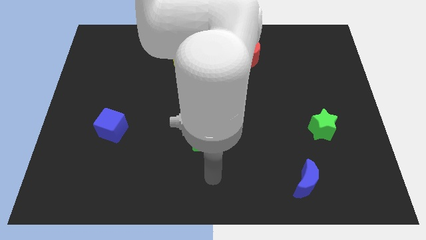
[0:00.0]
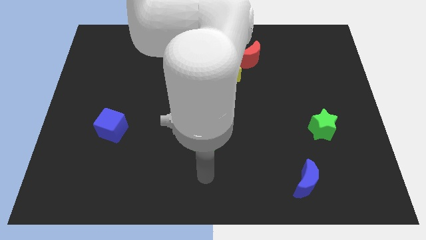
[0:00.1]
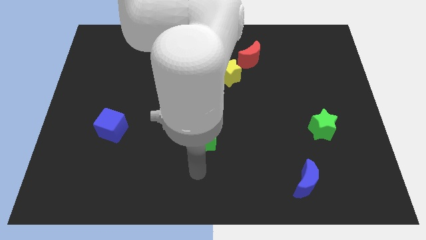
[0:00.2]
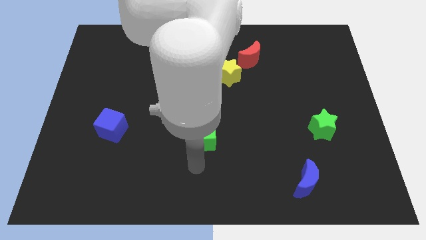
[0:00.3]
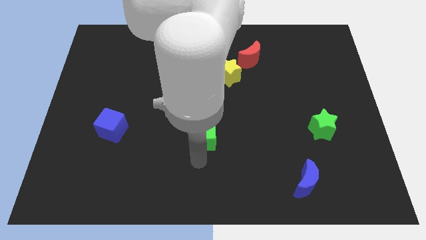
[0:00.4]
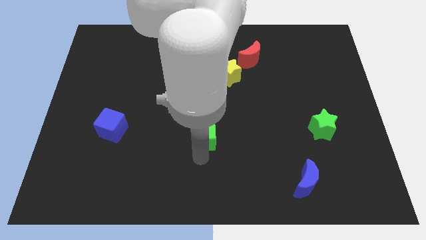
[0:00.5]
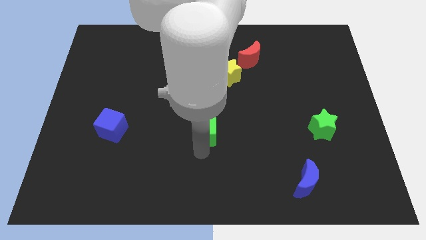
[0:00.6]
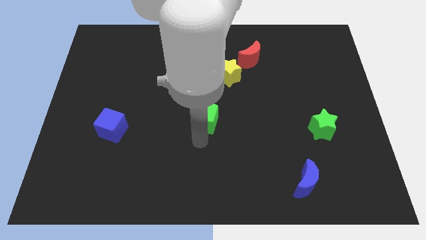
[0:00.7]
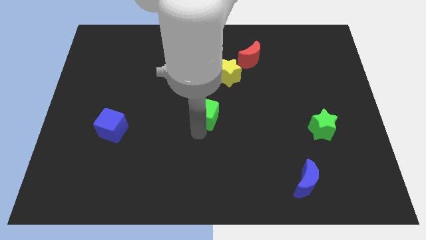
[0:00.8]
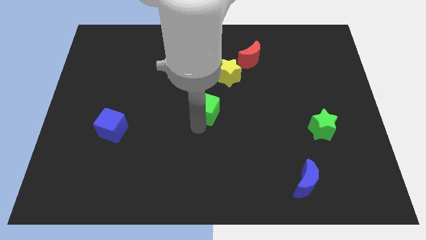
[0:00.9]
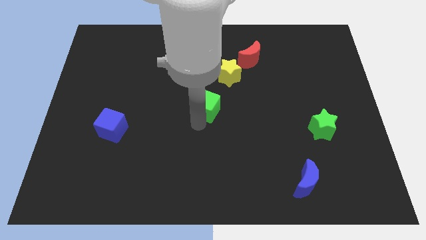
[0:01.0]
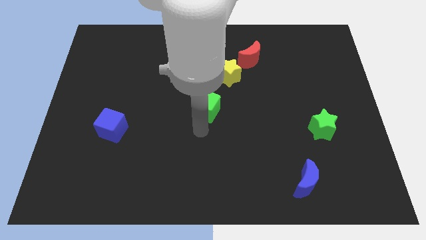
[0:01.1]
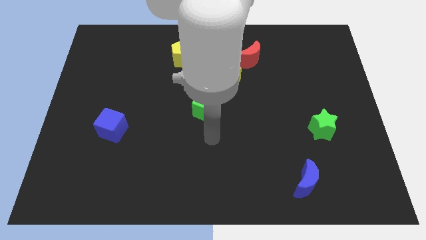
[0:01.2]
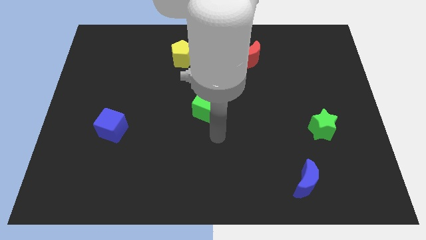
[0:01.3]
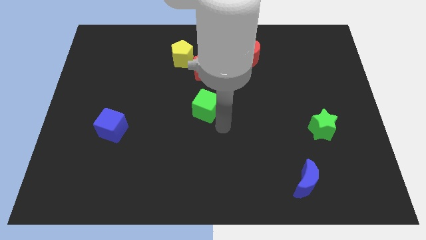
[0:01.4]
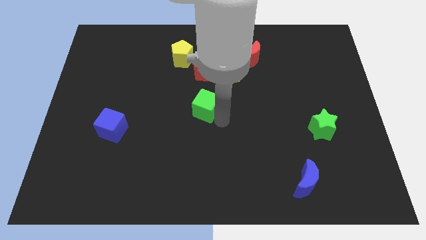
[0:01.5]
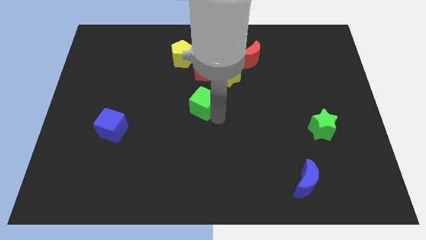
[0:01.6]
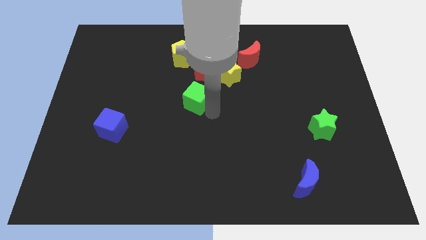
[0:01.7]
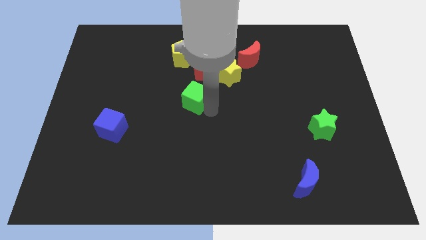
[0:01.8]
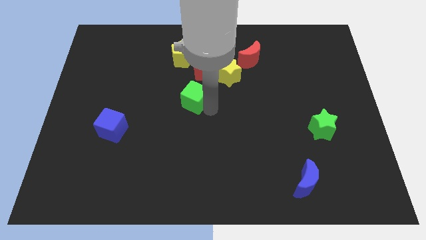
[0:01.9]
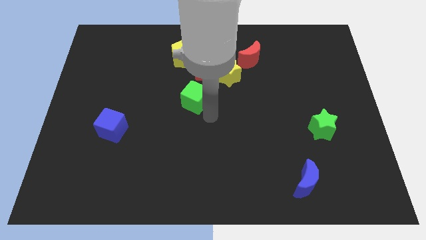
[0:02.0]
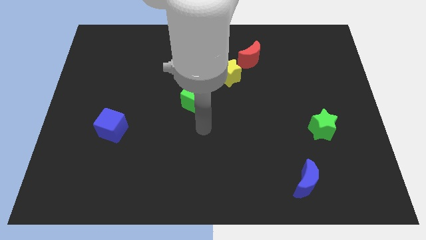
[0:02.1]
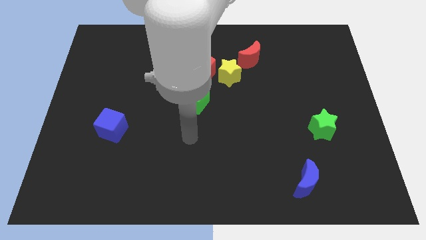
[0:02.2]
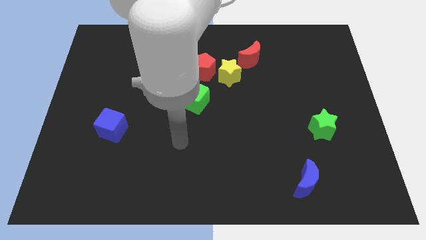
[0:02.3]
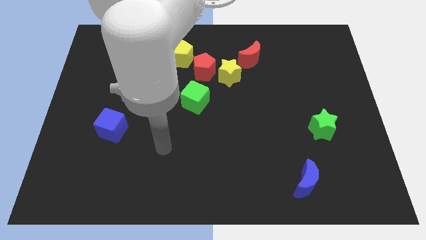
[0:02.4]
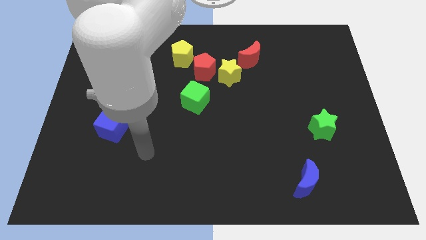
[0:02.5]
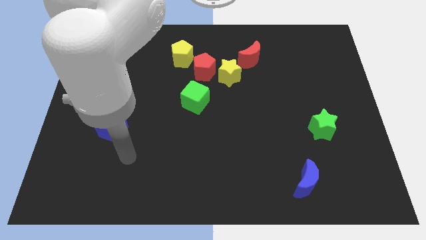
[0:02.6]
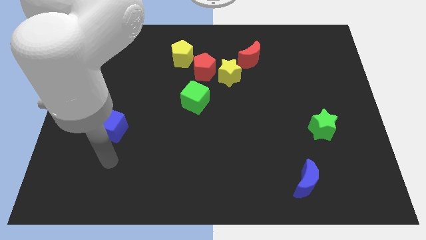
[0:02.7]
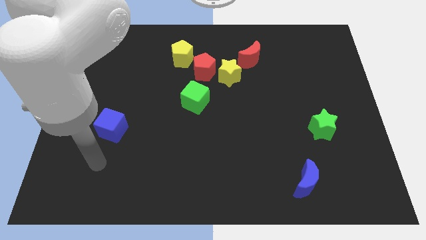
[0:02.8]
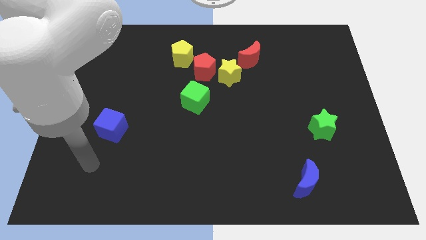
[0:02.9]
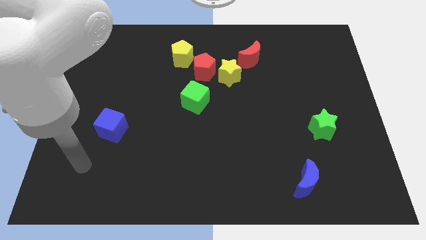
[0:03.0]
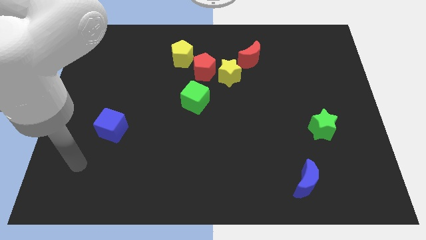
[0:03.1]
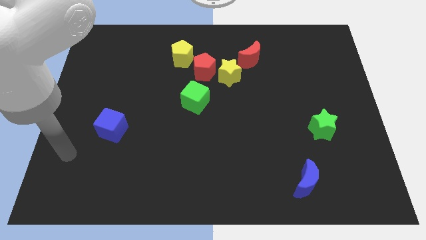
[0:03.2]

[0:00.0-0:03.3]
push green cube at the bottom of red pentagon

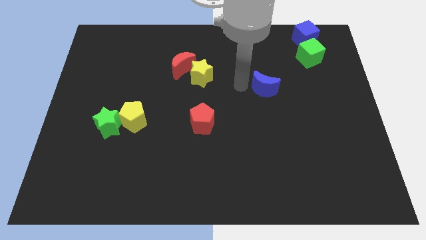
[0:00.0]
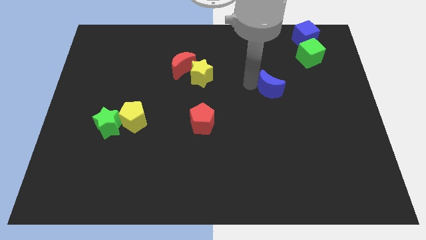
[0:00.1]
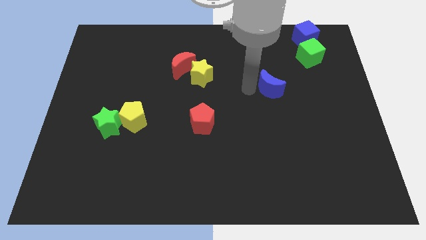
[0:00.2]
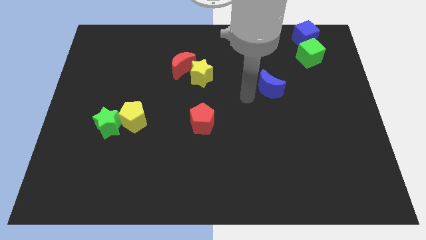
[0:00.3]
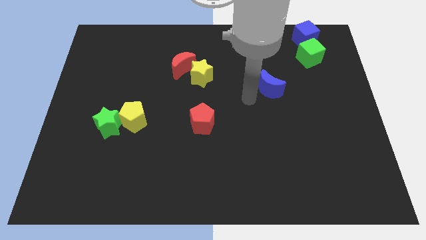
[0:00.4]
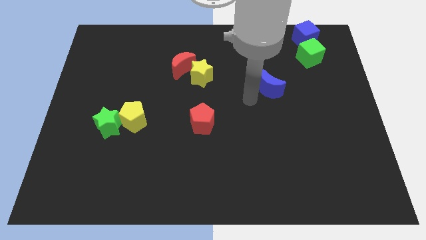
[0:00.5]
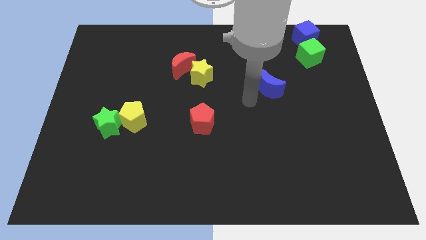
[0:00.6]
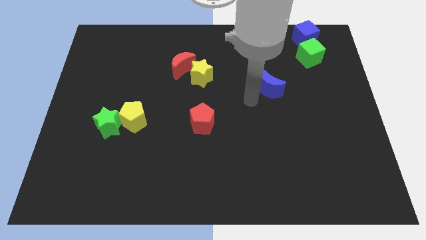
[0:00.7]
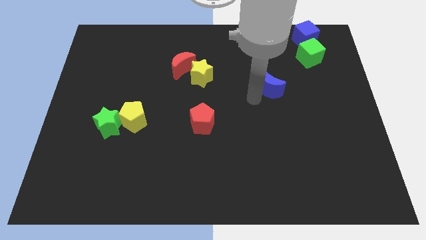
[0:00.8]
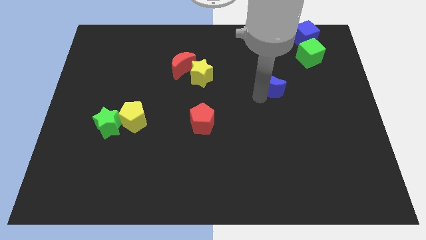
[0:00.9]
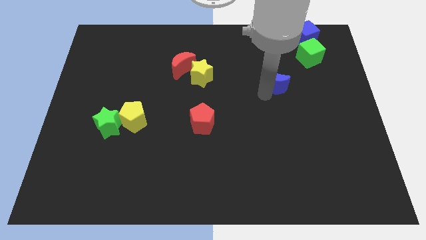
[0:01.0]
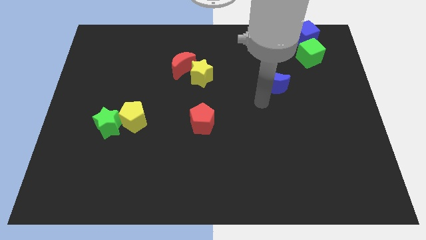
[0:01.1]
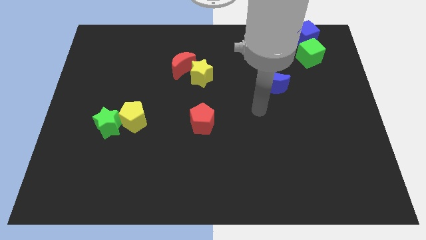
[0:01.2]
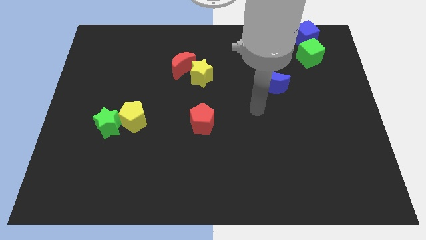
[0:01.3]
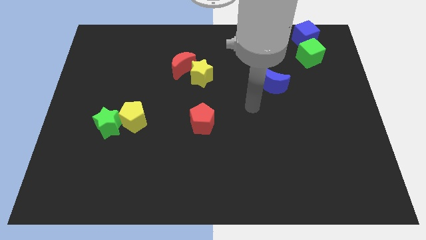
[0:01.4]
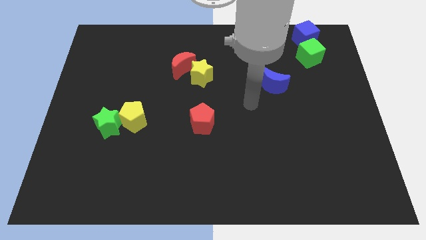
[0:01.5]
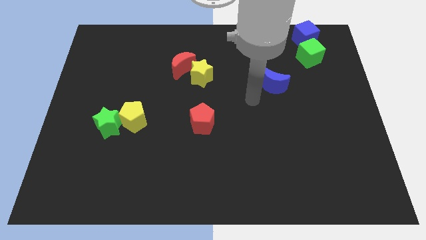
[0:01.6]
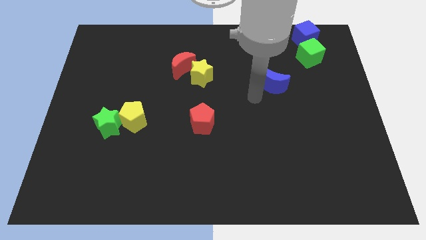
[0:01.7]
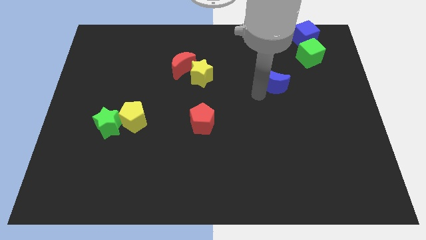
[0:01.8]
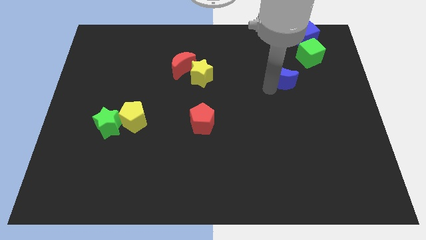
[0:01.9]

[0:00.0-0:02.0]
move the blue moon horizontally to the right side of the yellow star

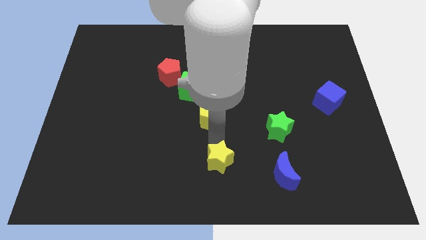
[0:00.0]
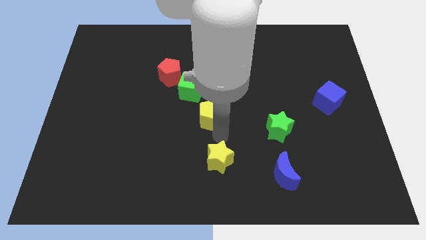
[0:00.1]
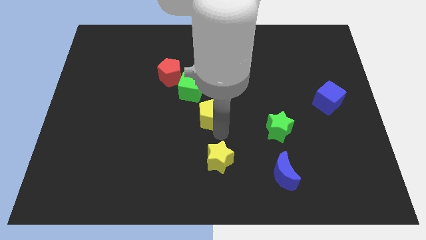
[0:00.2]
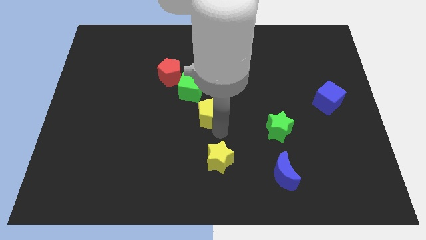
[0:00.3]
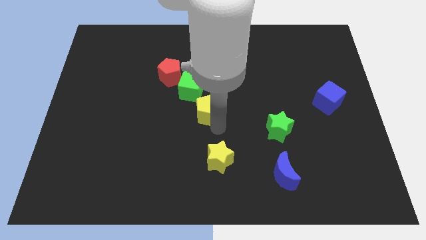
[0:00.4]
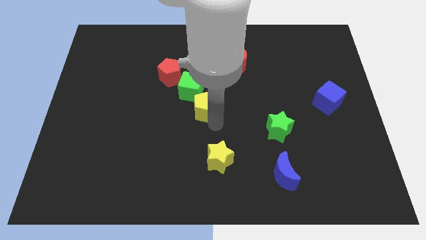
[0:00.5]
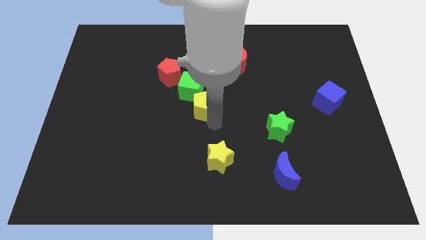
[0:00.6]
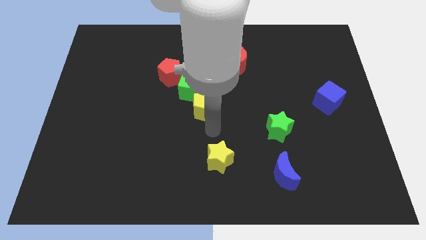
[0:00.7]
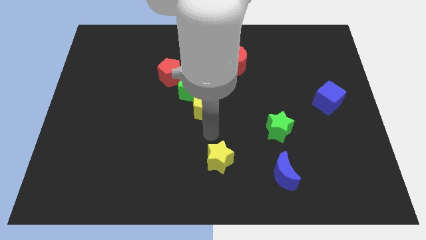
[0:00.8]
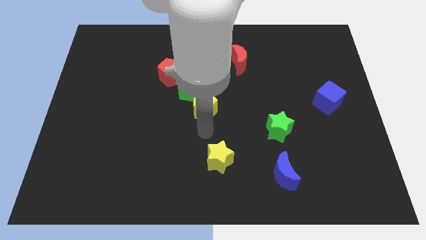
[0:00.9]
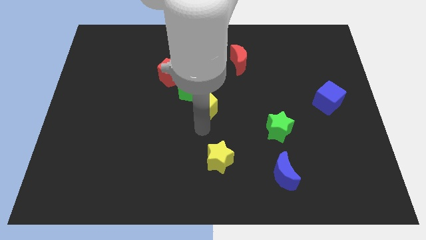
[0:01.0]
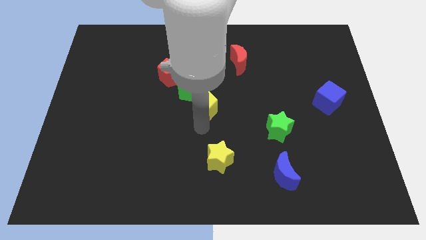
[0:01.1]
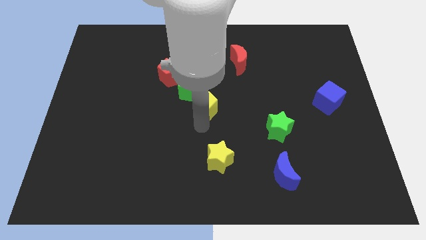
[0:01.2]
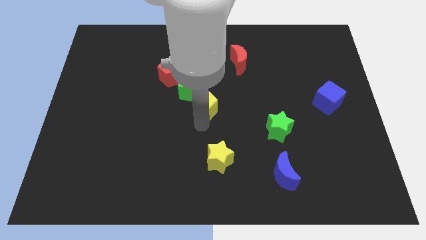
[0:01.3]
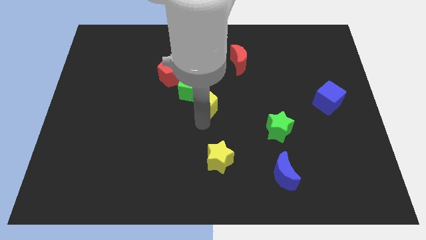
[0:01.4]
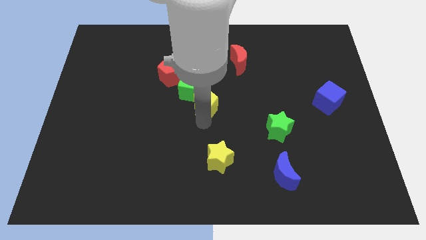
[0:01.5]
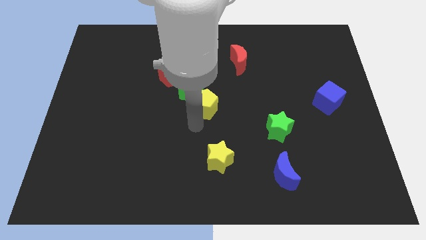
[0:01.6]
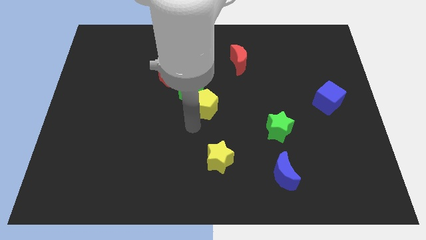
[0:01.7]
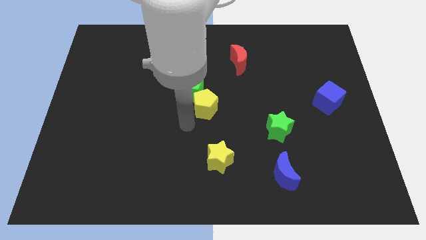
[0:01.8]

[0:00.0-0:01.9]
place the yellow pentagon to the bottom right of green cube

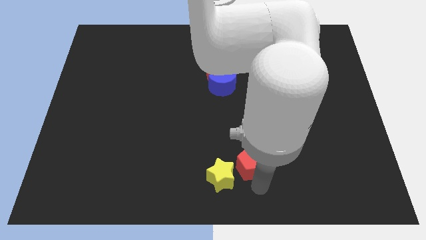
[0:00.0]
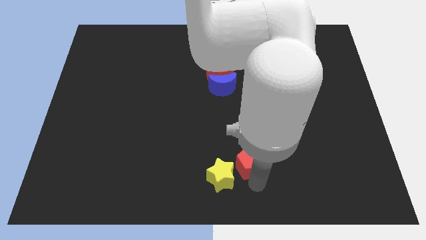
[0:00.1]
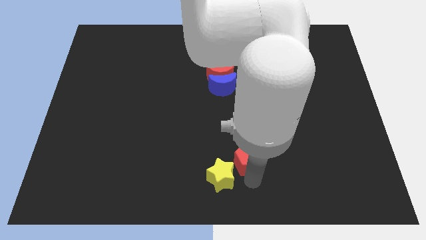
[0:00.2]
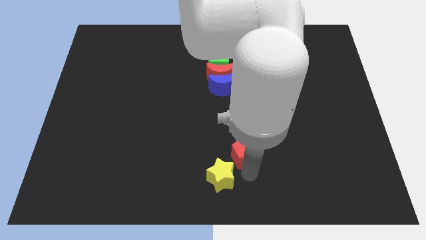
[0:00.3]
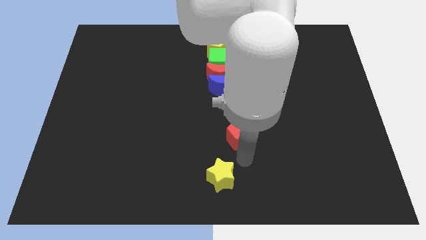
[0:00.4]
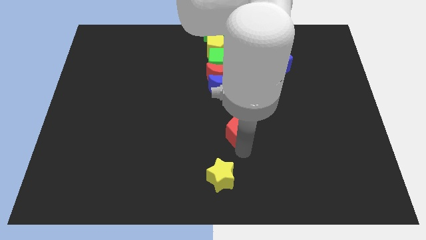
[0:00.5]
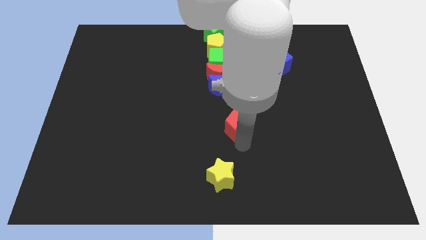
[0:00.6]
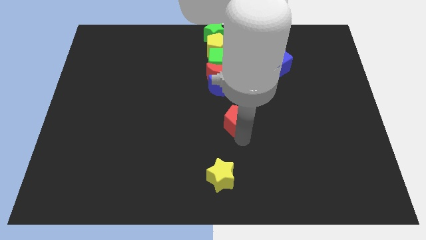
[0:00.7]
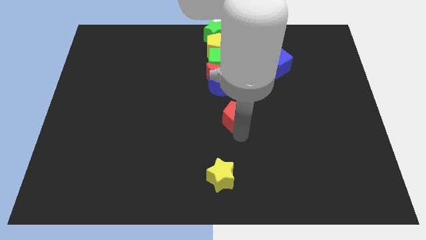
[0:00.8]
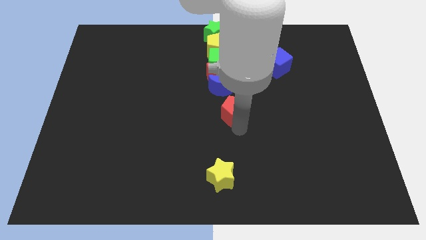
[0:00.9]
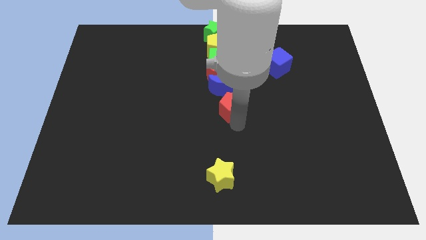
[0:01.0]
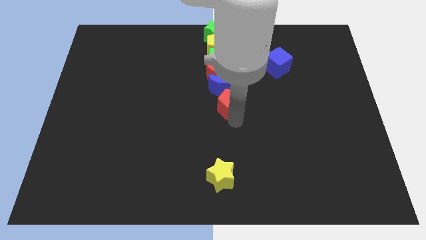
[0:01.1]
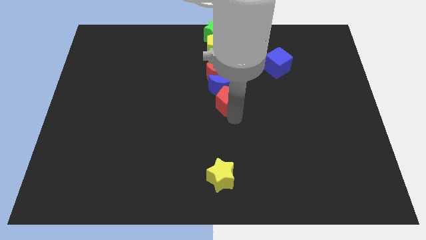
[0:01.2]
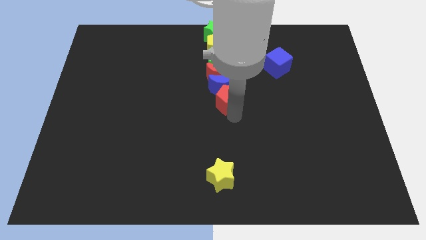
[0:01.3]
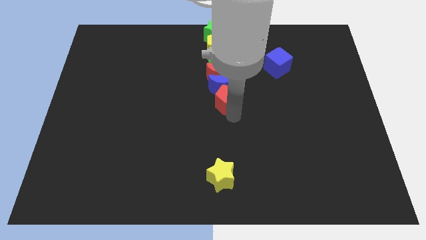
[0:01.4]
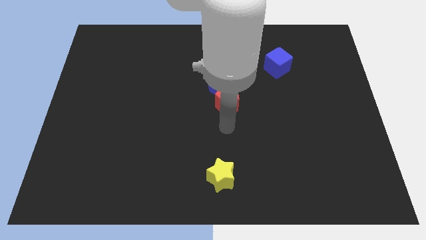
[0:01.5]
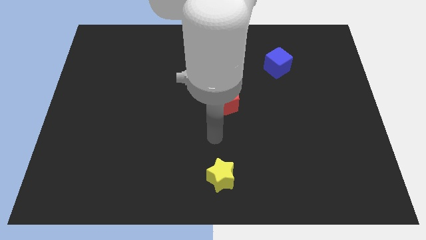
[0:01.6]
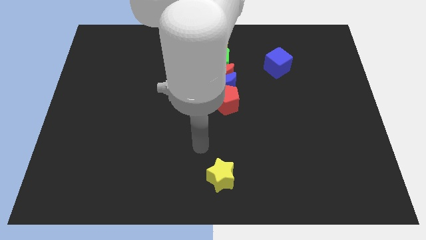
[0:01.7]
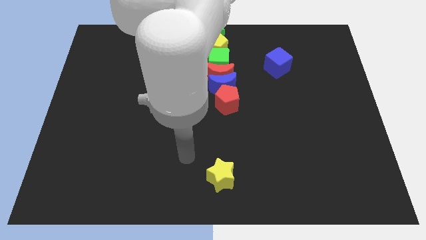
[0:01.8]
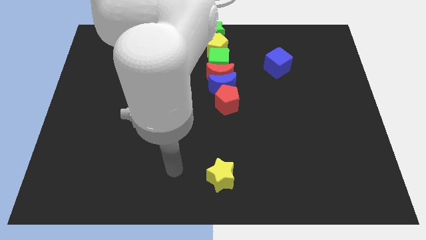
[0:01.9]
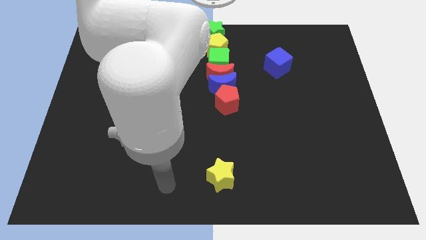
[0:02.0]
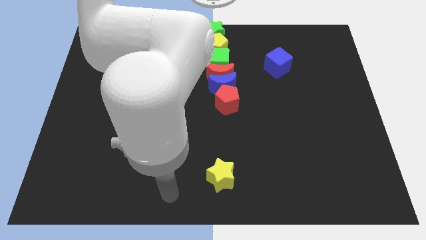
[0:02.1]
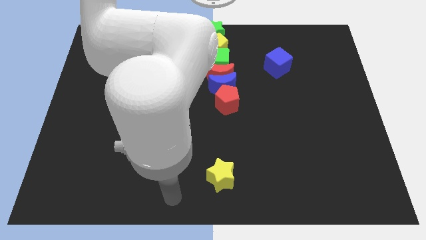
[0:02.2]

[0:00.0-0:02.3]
place the red pentagon down to the blue moon
